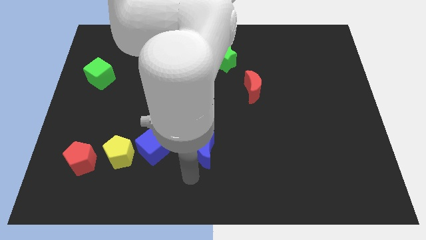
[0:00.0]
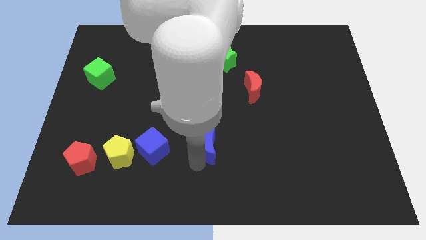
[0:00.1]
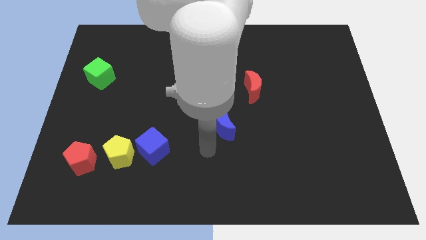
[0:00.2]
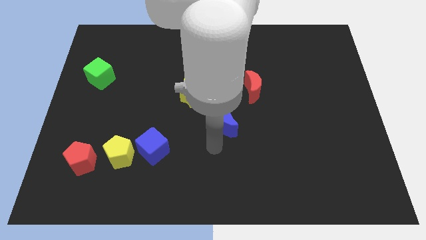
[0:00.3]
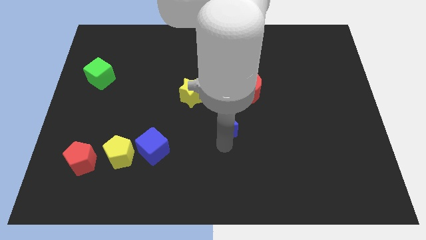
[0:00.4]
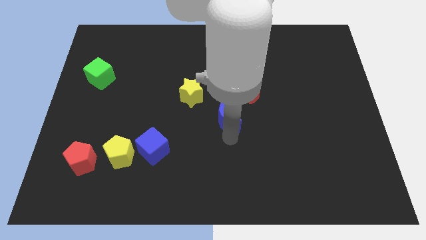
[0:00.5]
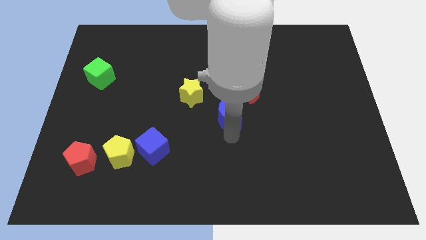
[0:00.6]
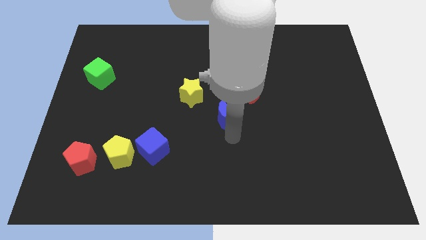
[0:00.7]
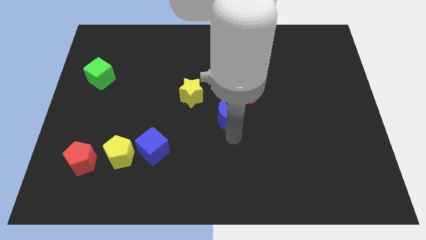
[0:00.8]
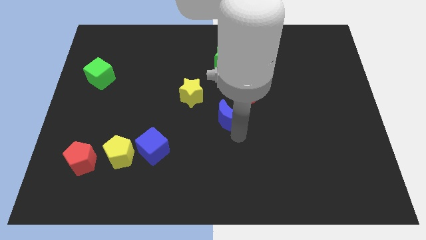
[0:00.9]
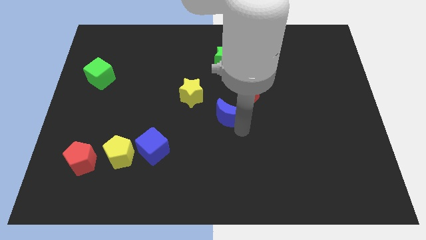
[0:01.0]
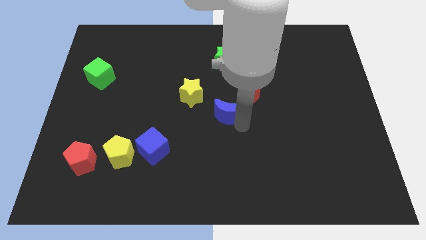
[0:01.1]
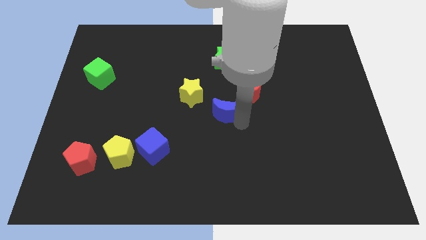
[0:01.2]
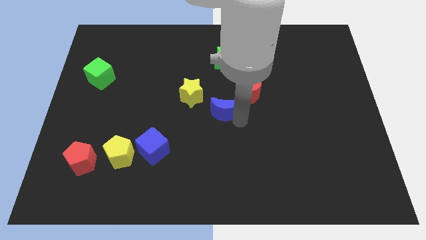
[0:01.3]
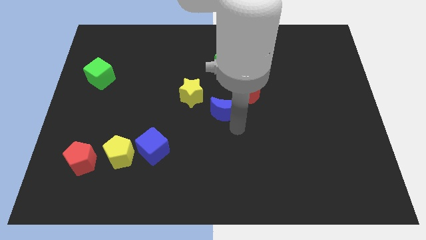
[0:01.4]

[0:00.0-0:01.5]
move the blue crescent to the center of the board

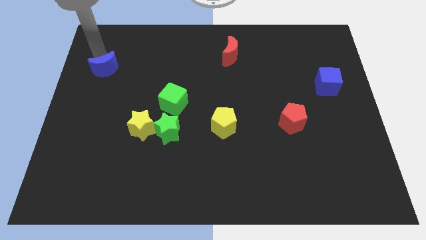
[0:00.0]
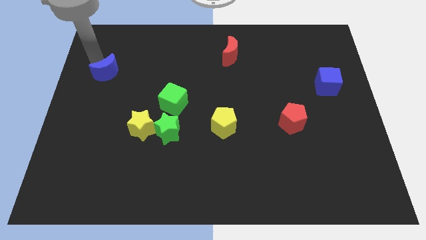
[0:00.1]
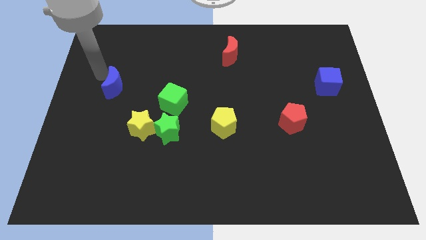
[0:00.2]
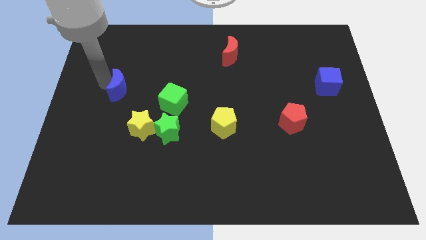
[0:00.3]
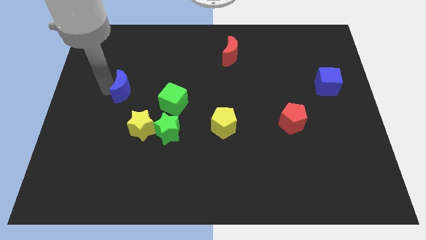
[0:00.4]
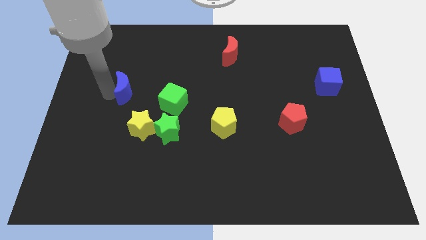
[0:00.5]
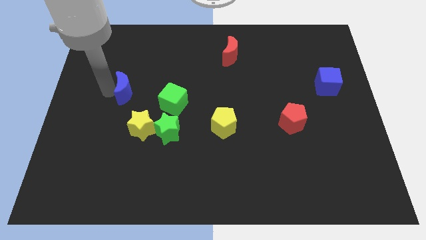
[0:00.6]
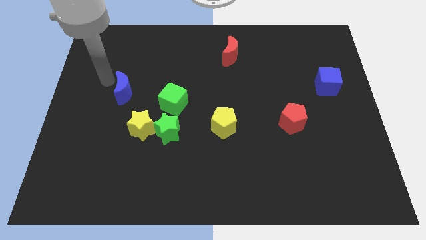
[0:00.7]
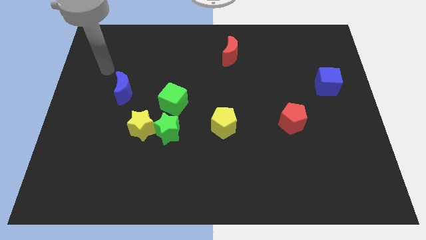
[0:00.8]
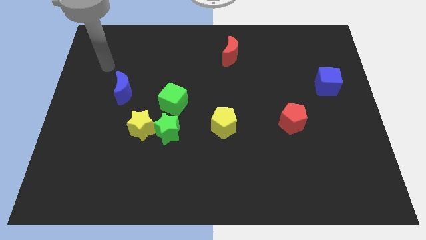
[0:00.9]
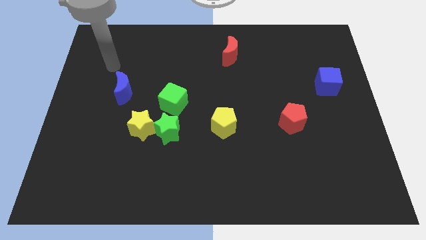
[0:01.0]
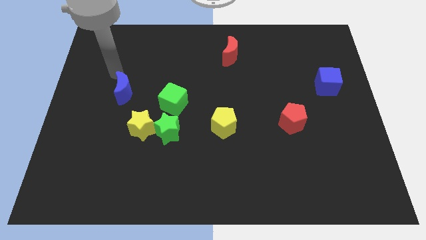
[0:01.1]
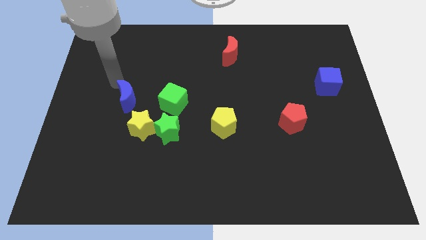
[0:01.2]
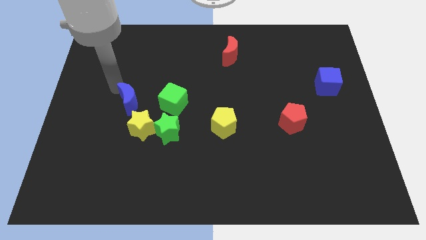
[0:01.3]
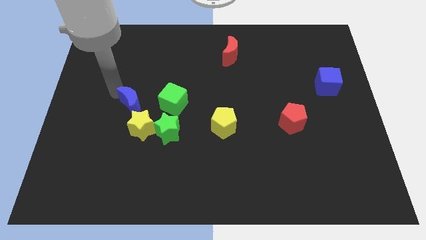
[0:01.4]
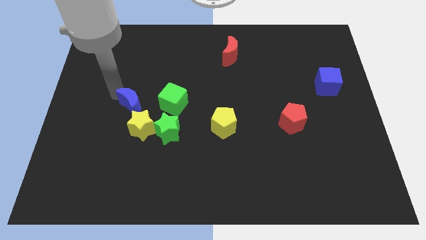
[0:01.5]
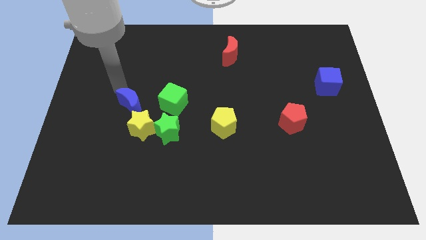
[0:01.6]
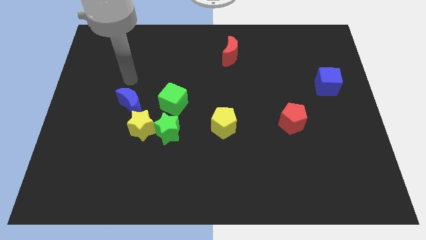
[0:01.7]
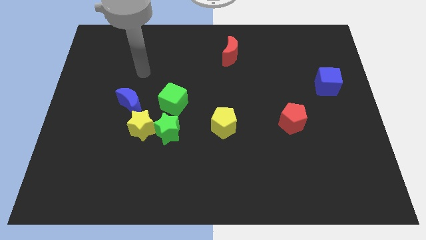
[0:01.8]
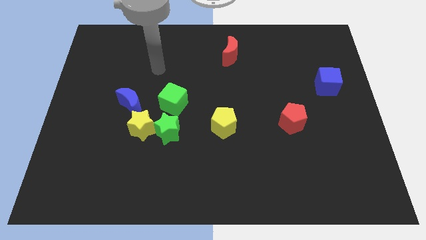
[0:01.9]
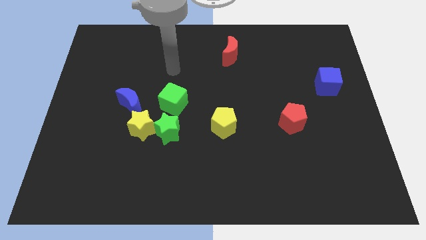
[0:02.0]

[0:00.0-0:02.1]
place the blue moon left to the green cube

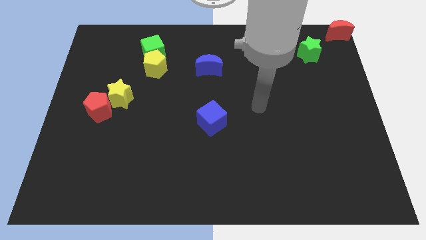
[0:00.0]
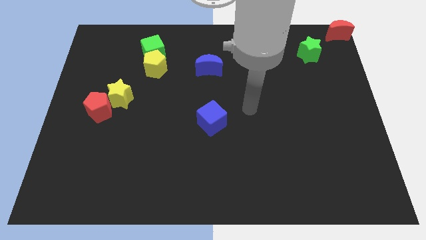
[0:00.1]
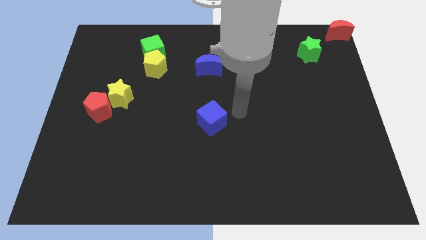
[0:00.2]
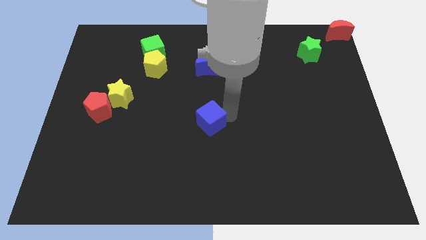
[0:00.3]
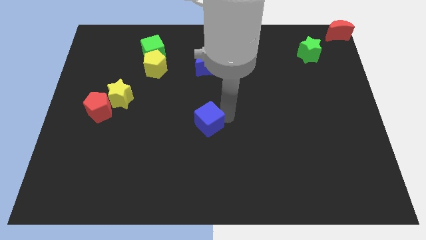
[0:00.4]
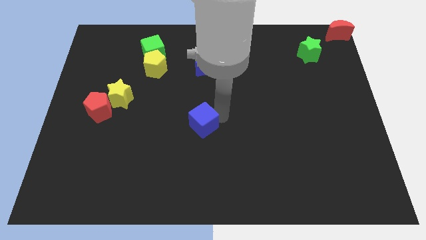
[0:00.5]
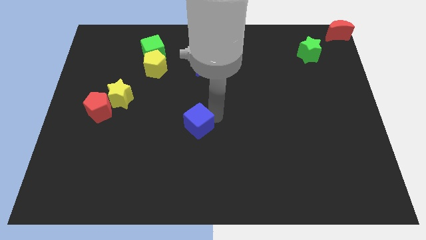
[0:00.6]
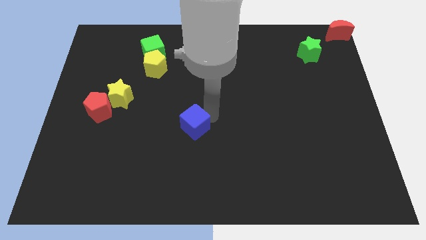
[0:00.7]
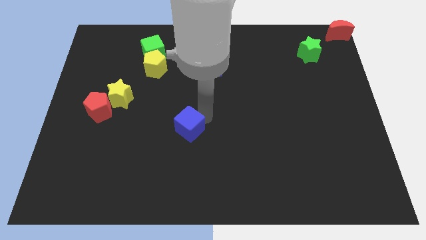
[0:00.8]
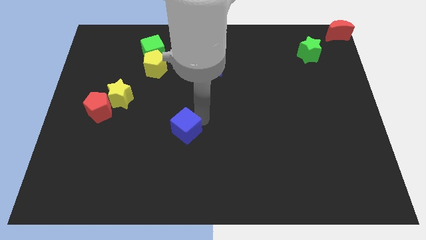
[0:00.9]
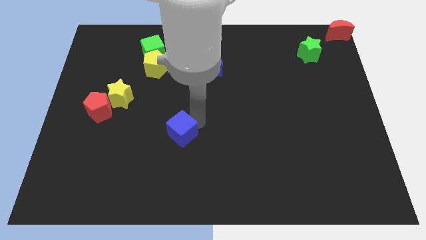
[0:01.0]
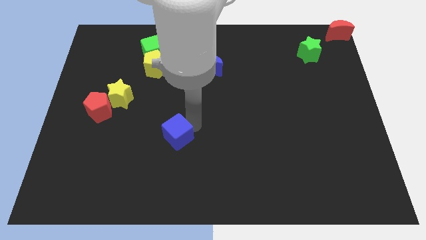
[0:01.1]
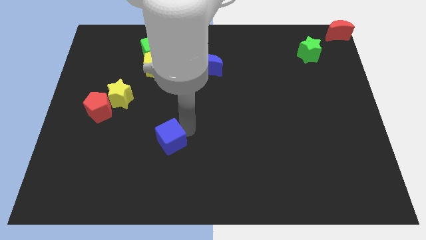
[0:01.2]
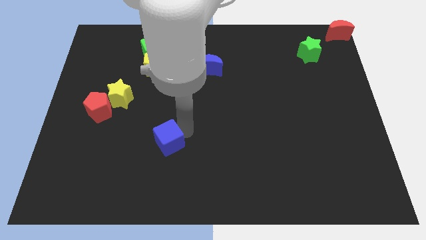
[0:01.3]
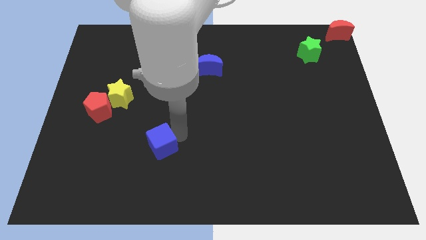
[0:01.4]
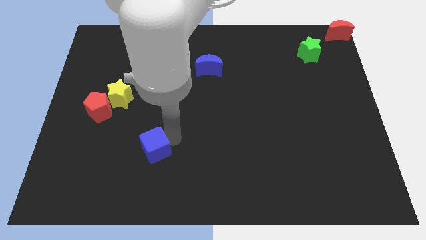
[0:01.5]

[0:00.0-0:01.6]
place the blue cube below the yellow pentagon

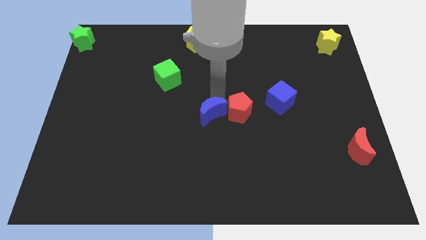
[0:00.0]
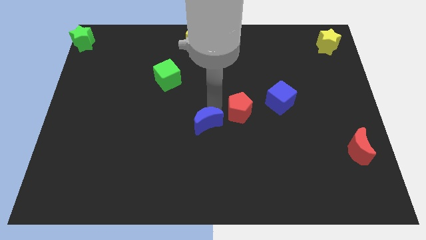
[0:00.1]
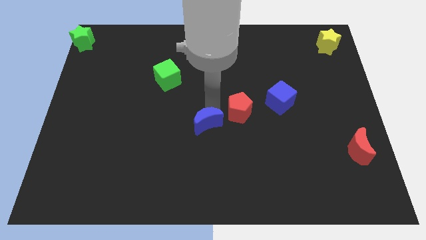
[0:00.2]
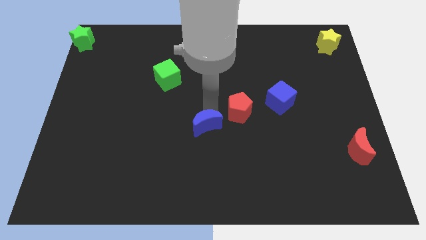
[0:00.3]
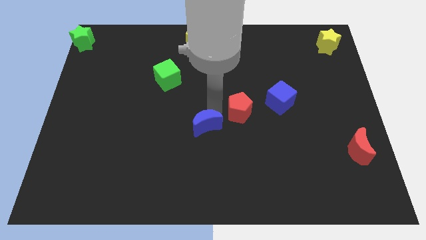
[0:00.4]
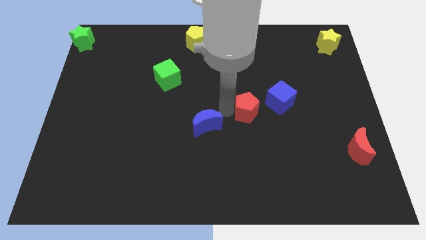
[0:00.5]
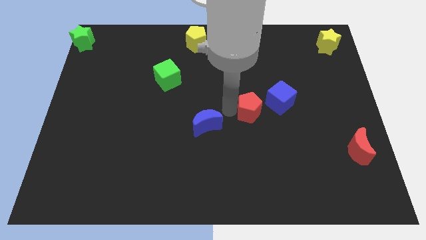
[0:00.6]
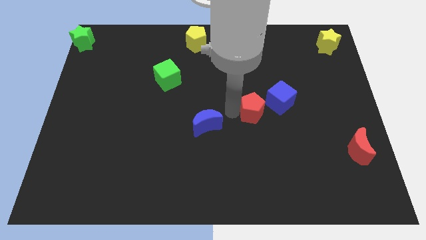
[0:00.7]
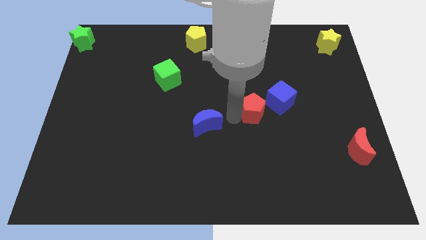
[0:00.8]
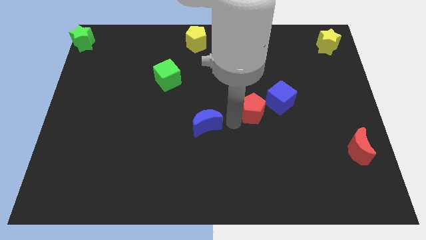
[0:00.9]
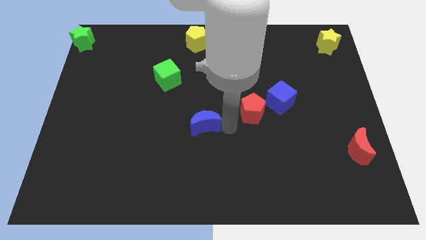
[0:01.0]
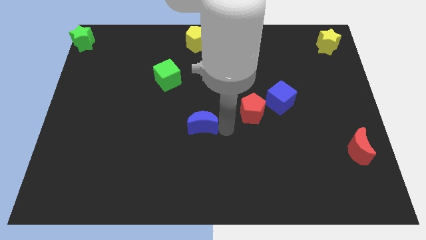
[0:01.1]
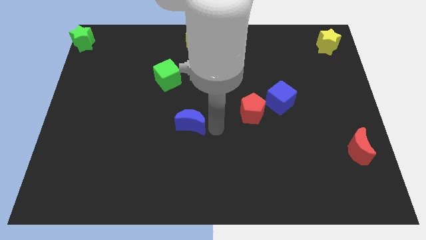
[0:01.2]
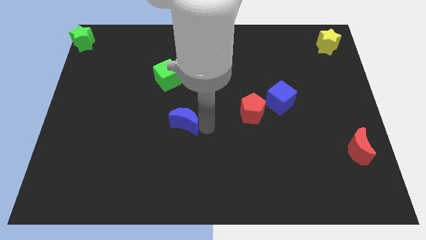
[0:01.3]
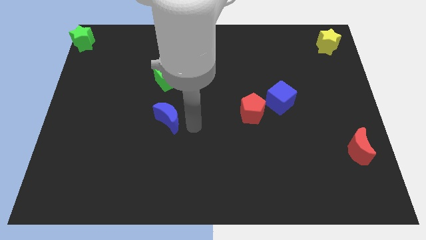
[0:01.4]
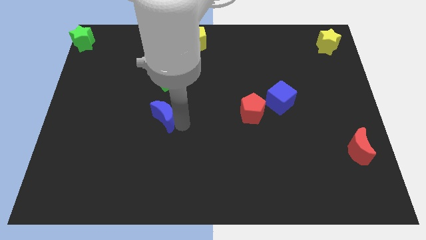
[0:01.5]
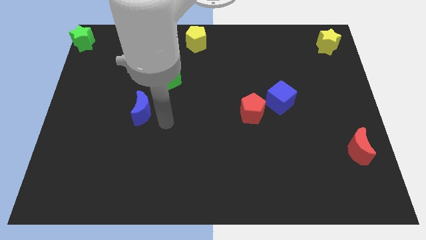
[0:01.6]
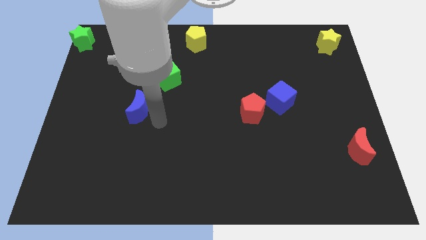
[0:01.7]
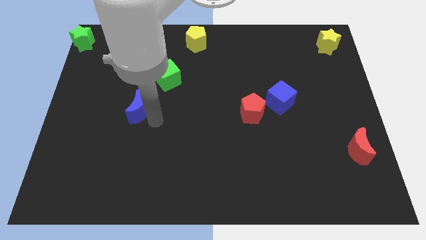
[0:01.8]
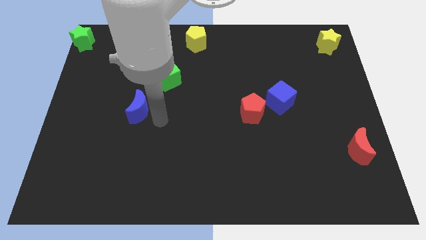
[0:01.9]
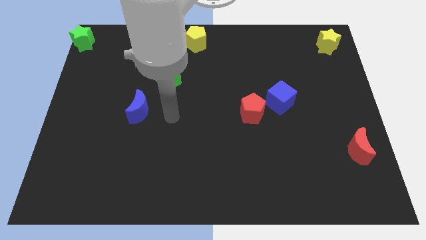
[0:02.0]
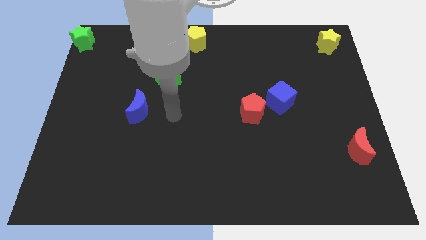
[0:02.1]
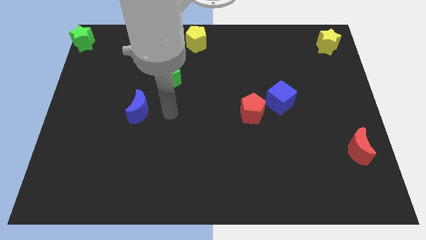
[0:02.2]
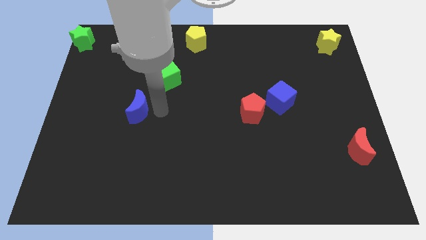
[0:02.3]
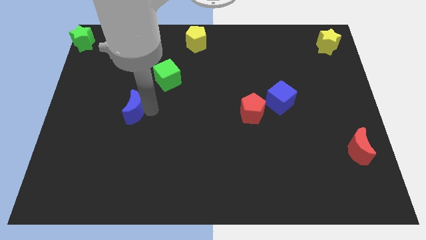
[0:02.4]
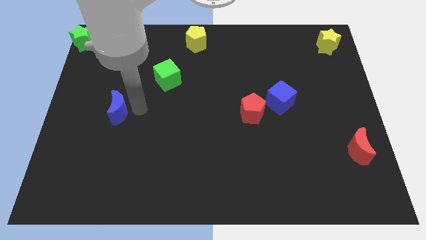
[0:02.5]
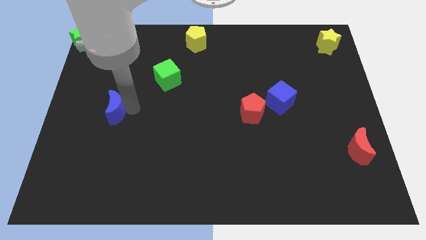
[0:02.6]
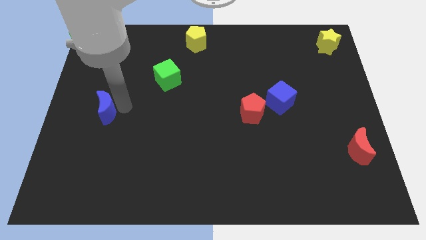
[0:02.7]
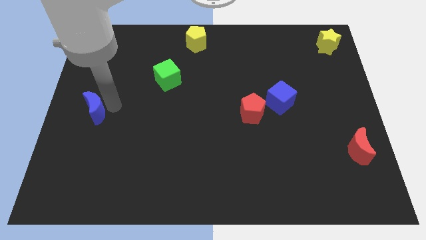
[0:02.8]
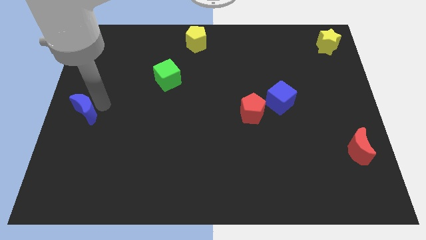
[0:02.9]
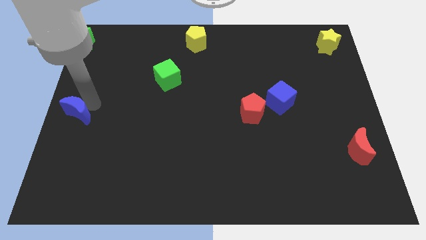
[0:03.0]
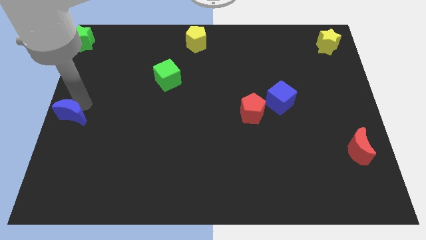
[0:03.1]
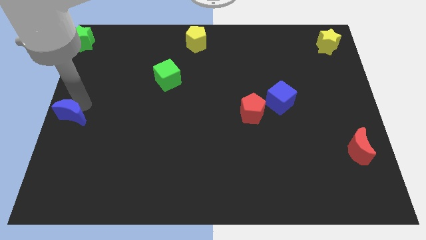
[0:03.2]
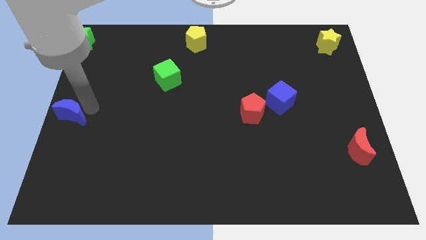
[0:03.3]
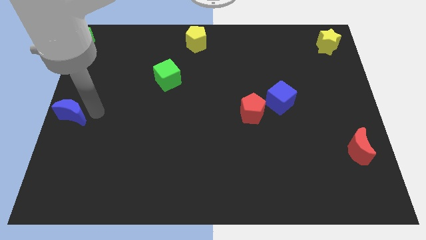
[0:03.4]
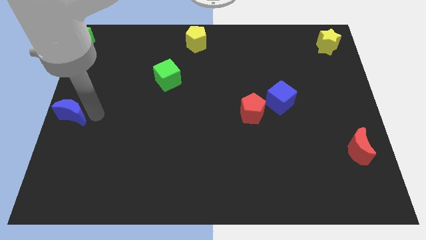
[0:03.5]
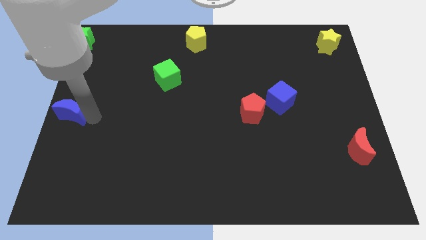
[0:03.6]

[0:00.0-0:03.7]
move the blue moon to the left middle side of the board
